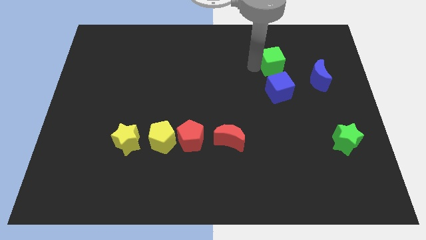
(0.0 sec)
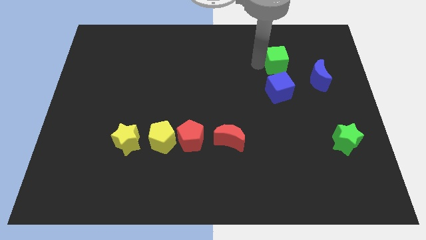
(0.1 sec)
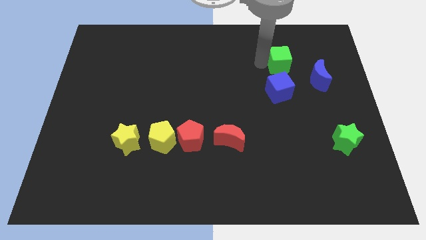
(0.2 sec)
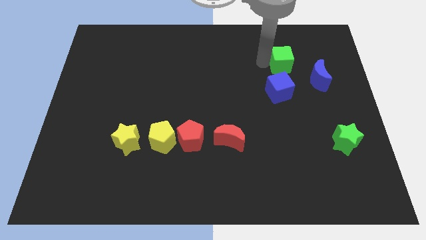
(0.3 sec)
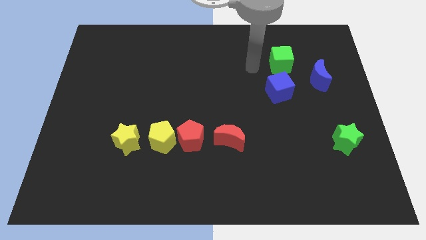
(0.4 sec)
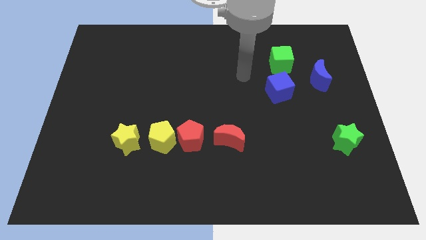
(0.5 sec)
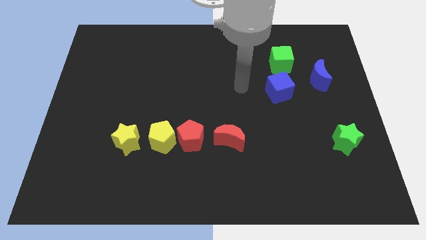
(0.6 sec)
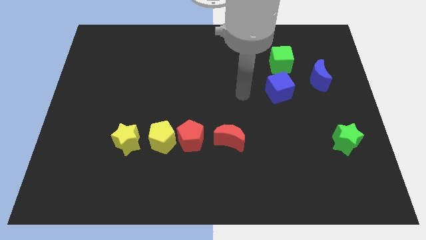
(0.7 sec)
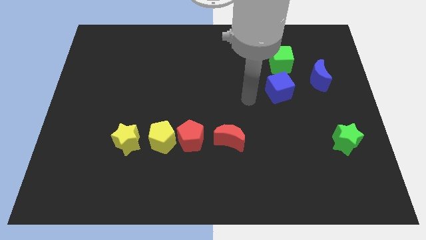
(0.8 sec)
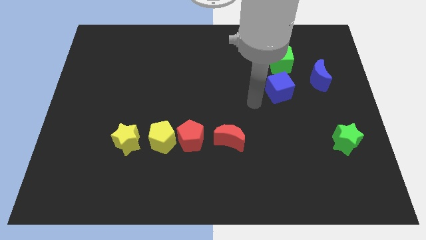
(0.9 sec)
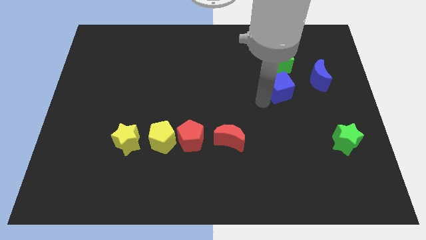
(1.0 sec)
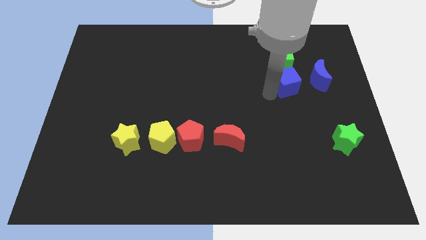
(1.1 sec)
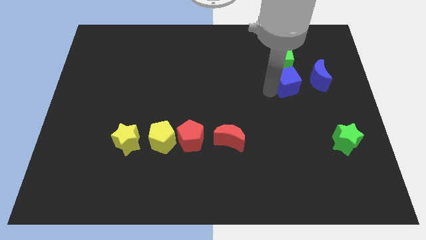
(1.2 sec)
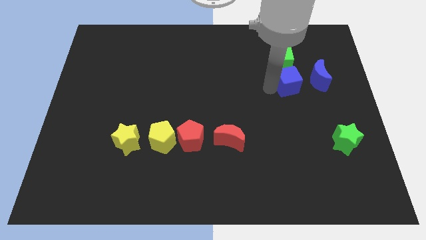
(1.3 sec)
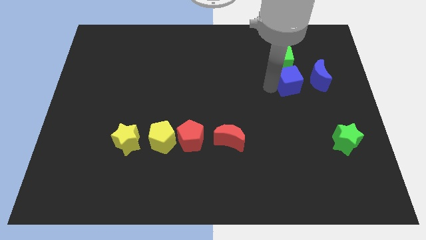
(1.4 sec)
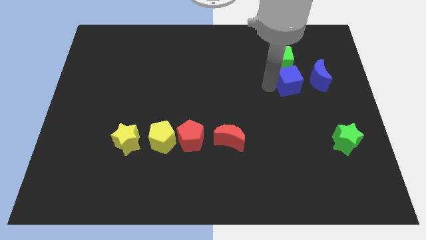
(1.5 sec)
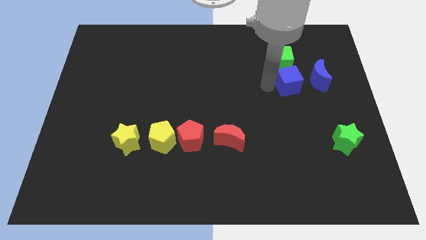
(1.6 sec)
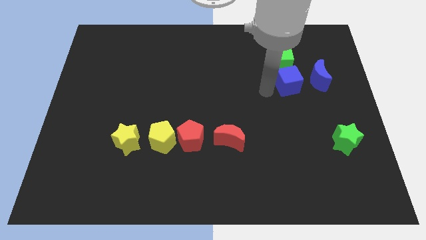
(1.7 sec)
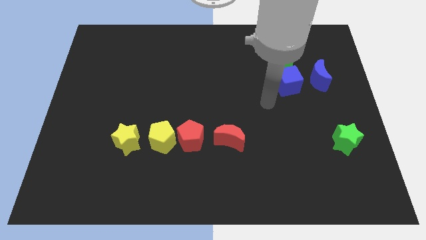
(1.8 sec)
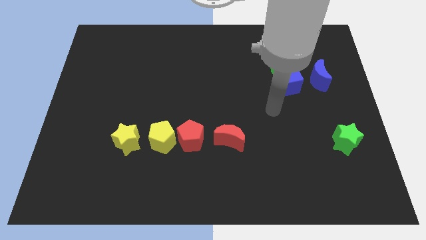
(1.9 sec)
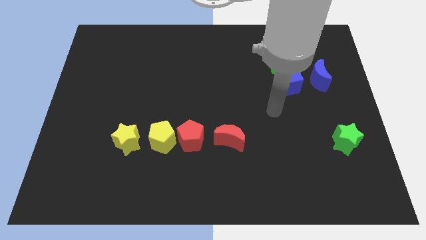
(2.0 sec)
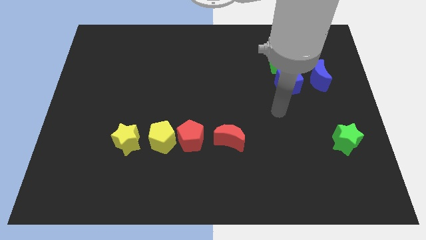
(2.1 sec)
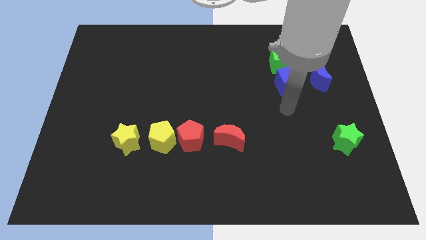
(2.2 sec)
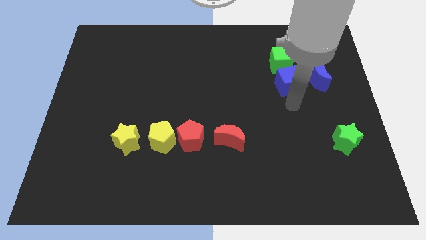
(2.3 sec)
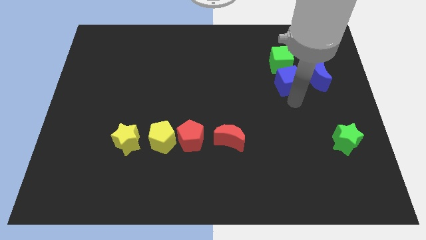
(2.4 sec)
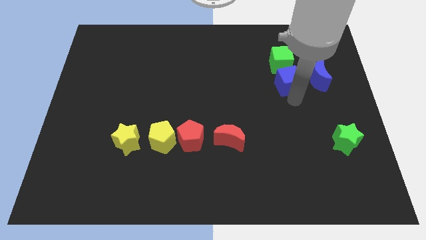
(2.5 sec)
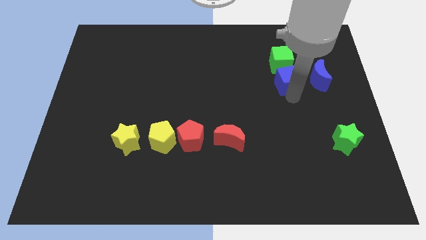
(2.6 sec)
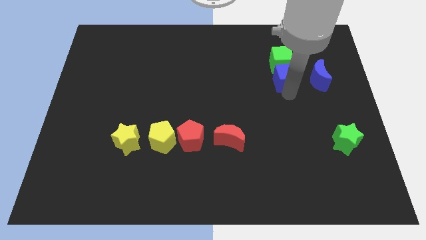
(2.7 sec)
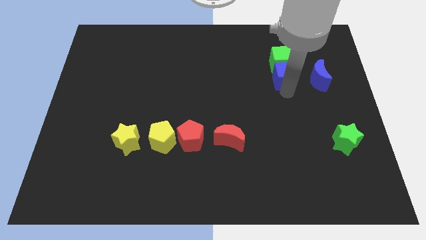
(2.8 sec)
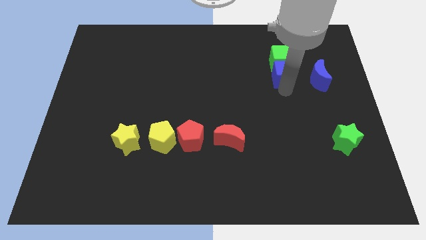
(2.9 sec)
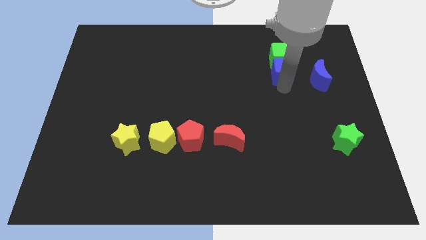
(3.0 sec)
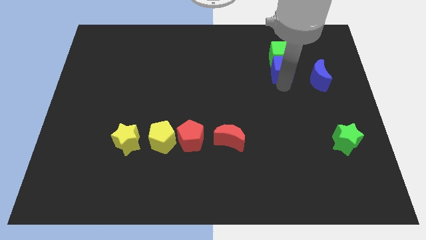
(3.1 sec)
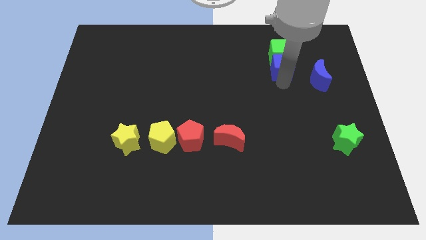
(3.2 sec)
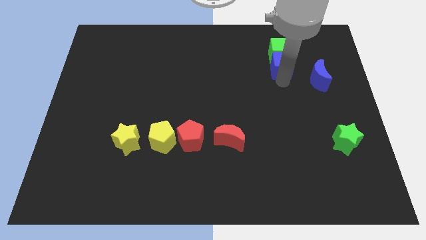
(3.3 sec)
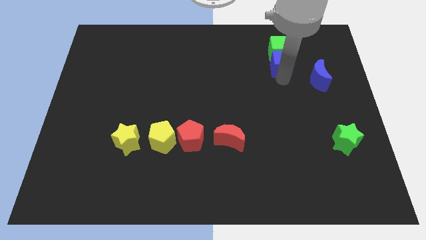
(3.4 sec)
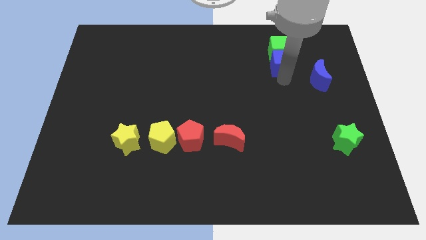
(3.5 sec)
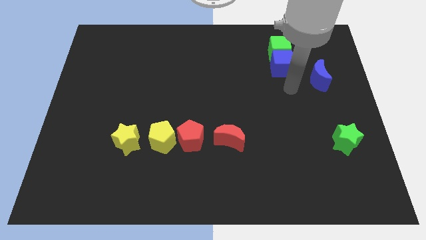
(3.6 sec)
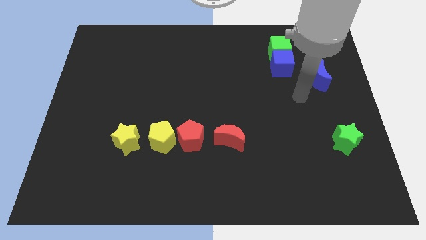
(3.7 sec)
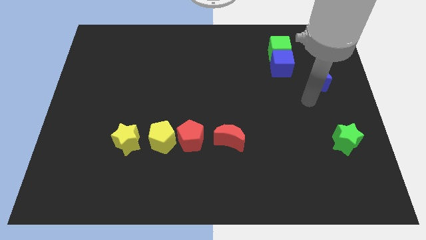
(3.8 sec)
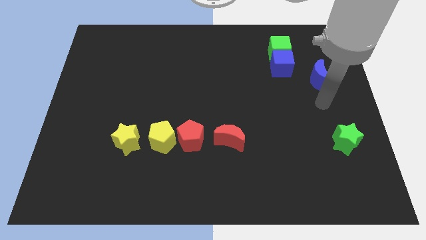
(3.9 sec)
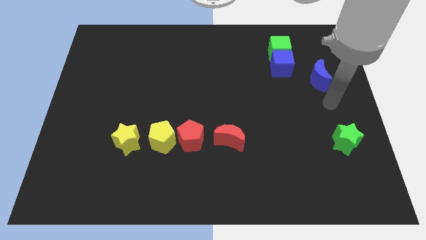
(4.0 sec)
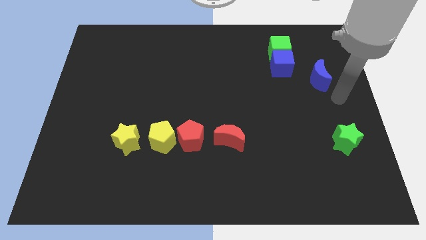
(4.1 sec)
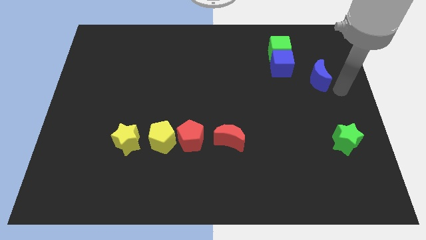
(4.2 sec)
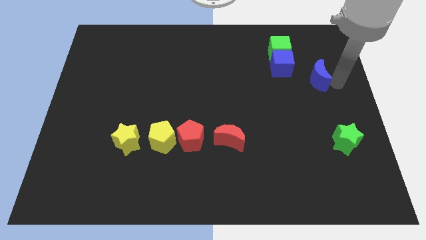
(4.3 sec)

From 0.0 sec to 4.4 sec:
push the green cube with the blue cube towards the top center of the board

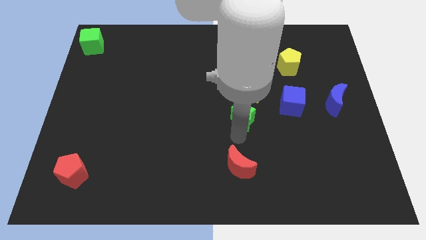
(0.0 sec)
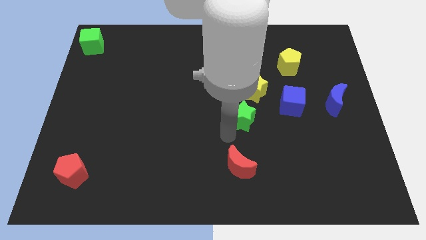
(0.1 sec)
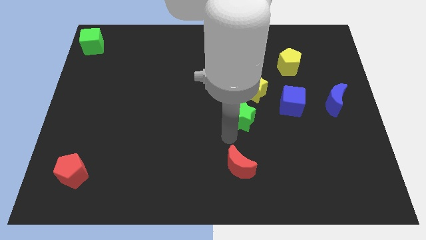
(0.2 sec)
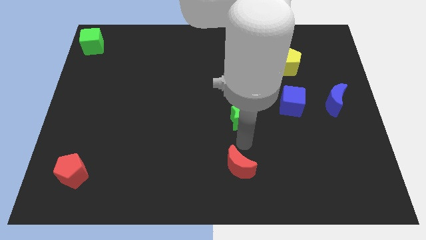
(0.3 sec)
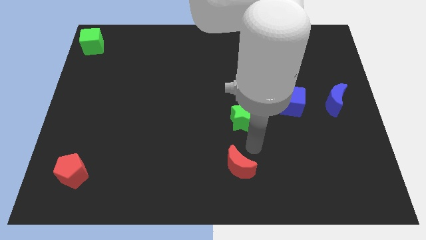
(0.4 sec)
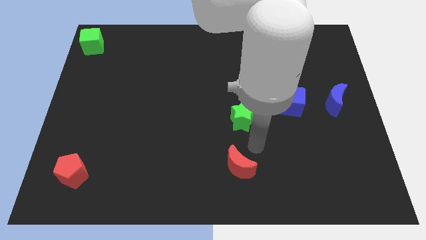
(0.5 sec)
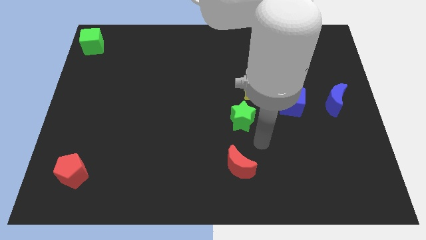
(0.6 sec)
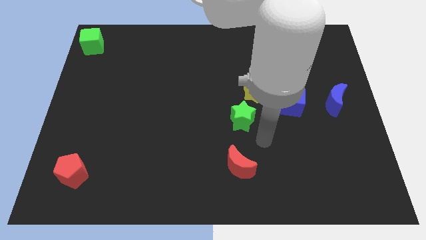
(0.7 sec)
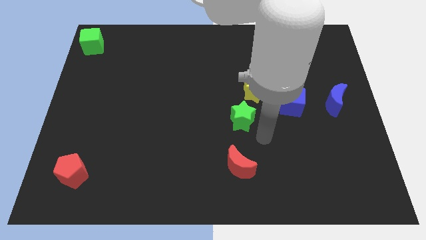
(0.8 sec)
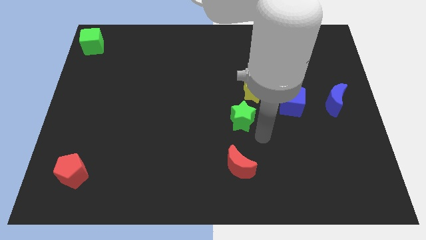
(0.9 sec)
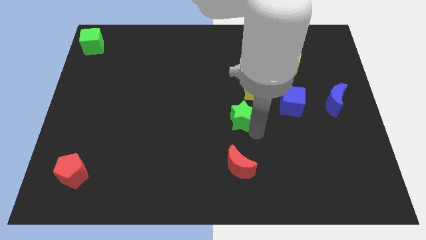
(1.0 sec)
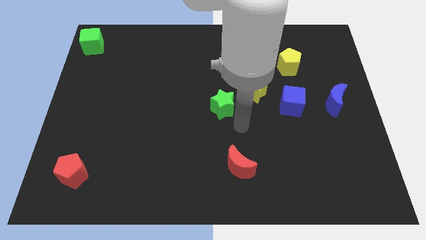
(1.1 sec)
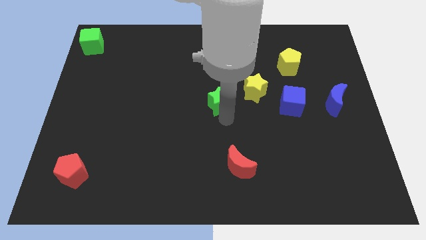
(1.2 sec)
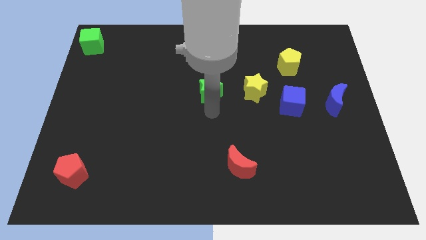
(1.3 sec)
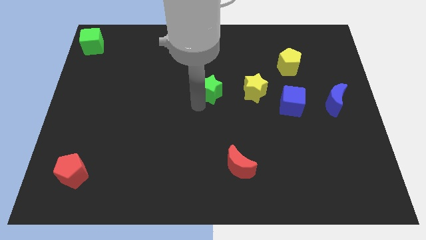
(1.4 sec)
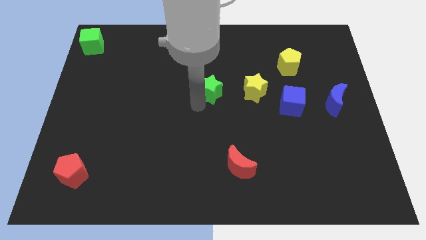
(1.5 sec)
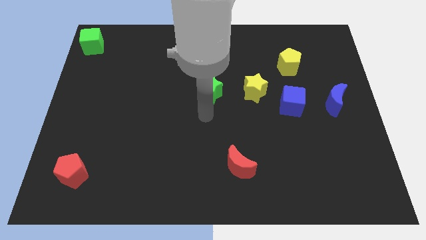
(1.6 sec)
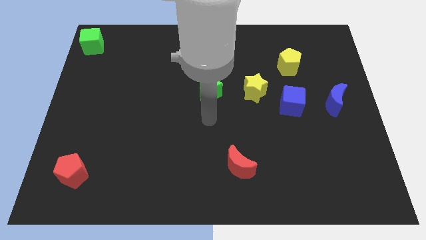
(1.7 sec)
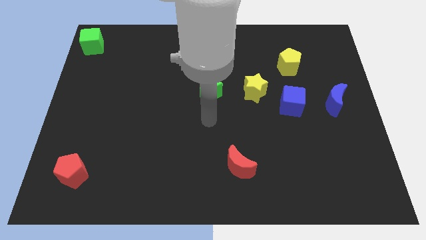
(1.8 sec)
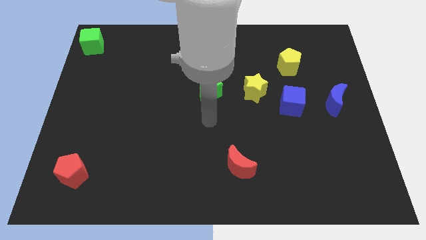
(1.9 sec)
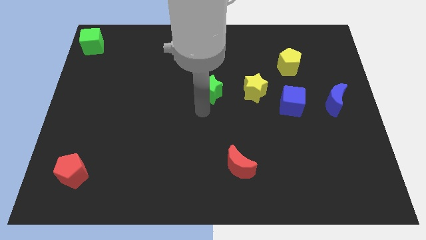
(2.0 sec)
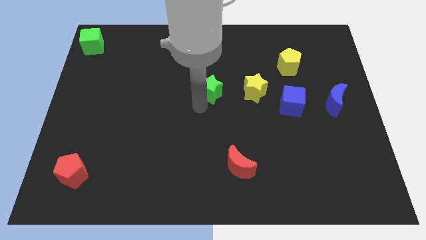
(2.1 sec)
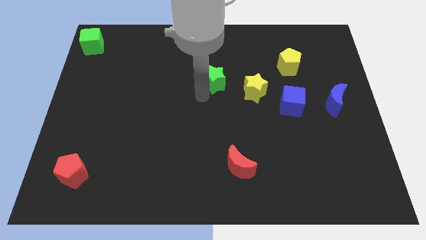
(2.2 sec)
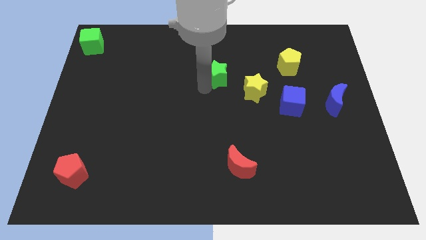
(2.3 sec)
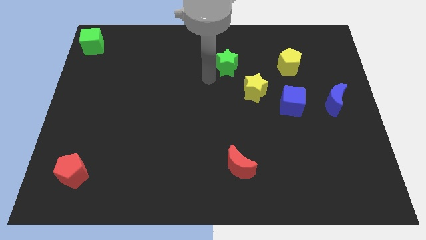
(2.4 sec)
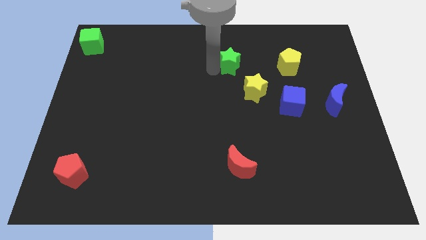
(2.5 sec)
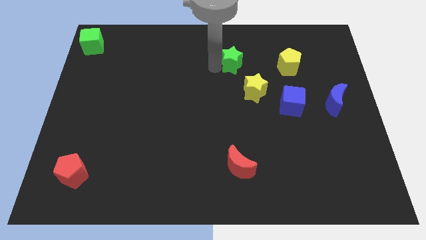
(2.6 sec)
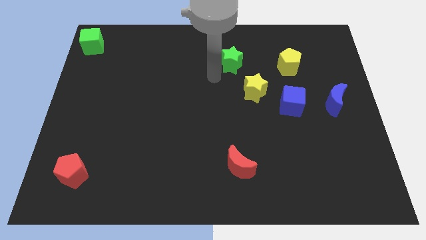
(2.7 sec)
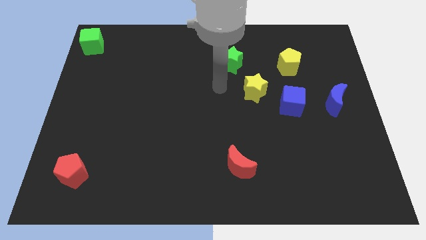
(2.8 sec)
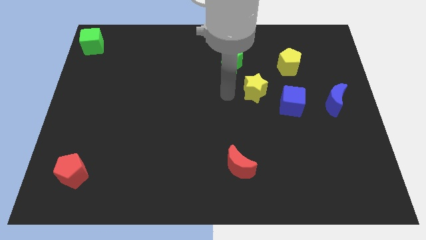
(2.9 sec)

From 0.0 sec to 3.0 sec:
push the green star to top left of the yellow star

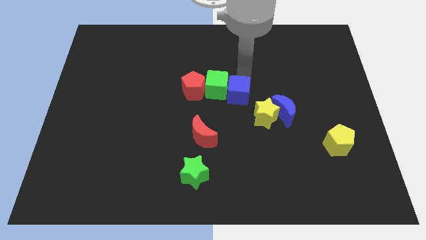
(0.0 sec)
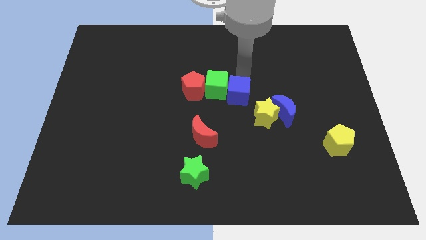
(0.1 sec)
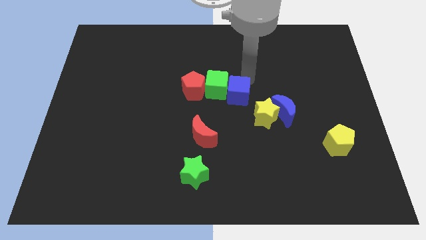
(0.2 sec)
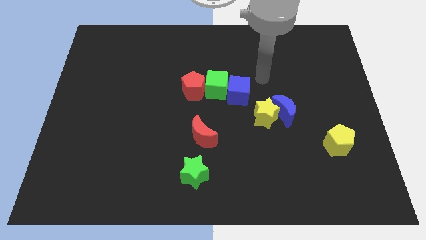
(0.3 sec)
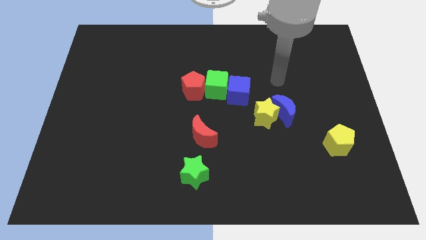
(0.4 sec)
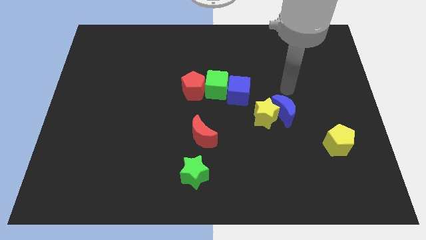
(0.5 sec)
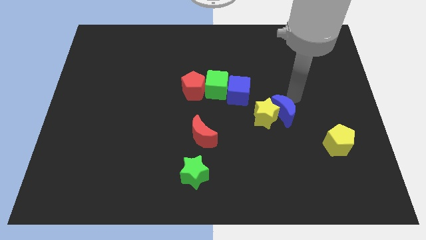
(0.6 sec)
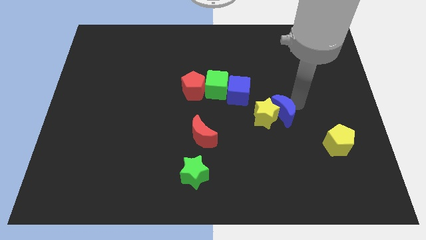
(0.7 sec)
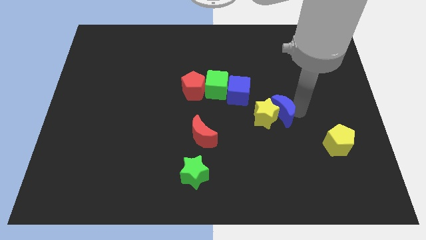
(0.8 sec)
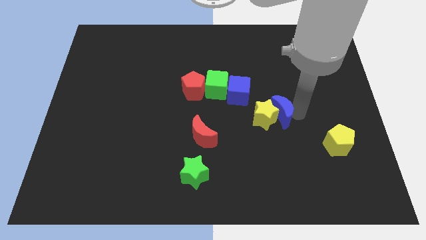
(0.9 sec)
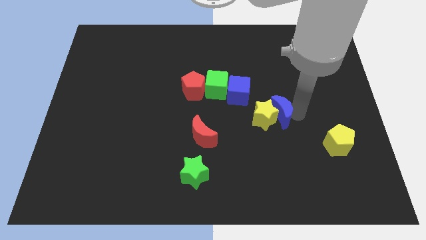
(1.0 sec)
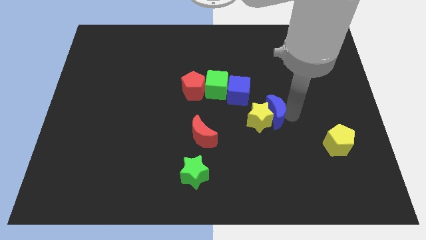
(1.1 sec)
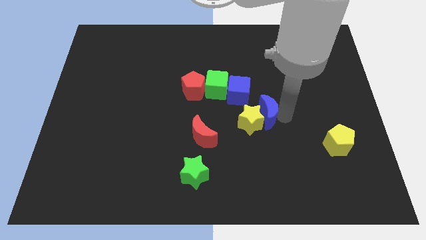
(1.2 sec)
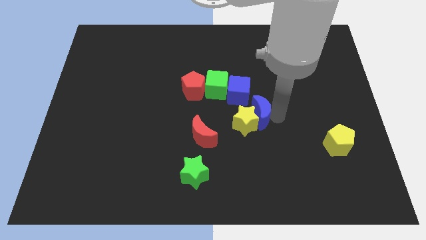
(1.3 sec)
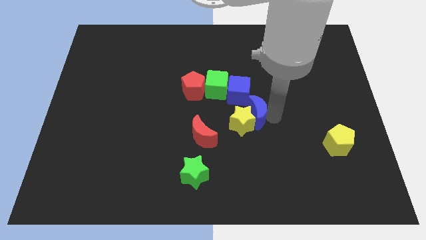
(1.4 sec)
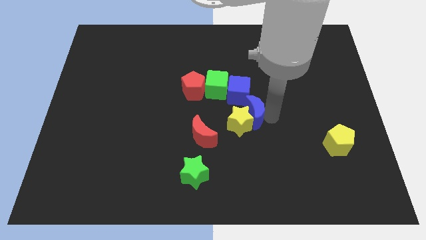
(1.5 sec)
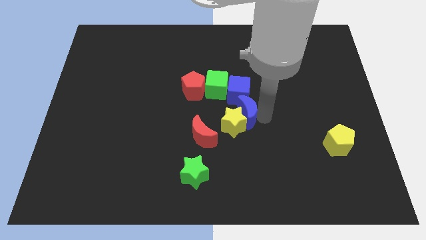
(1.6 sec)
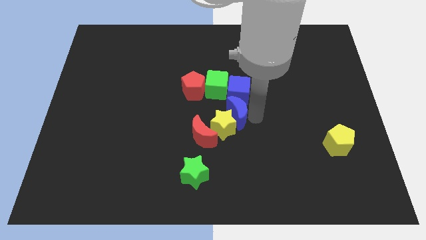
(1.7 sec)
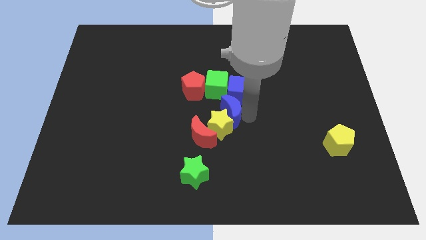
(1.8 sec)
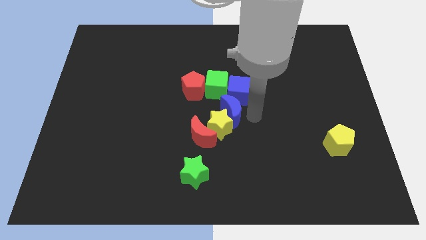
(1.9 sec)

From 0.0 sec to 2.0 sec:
move blue moon below the blue cube
